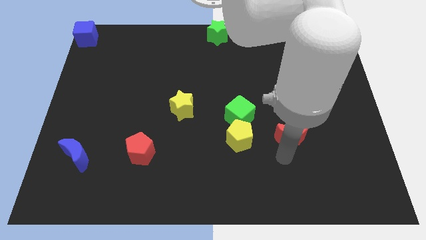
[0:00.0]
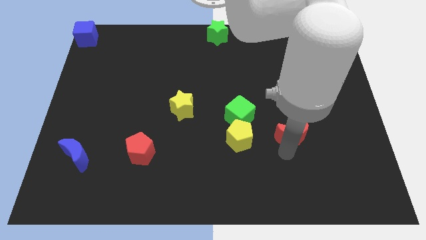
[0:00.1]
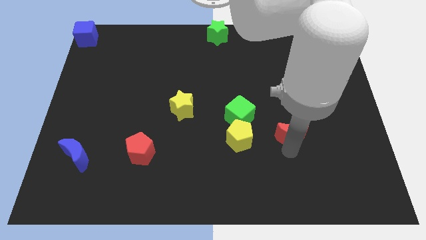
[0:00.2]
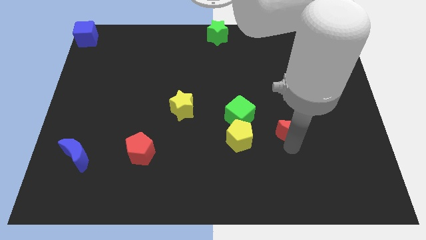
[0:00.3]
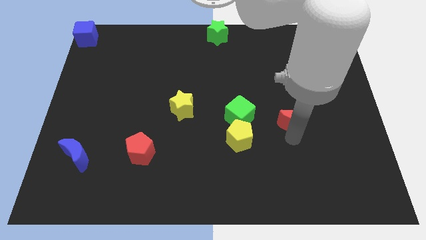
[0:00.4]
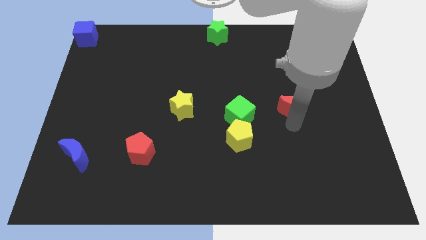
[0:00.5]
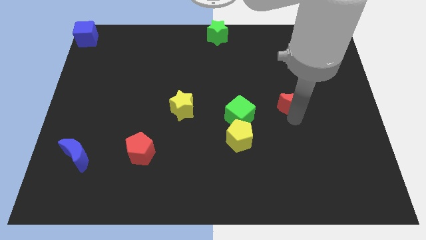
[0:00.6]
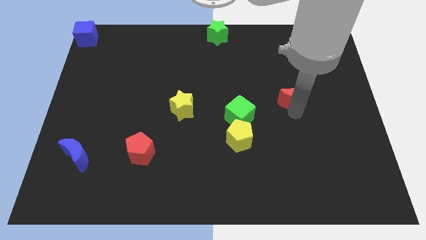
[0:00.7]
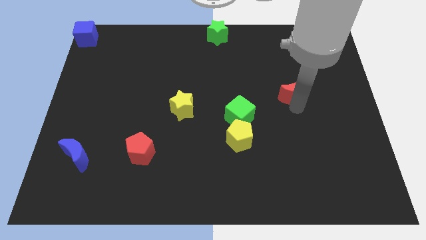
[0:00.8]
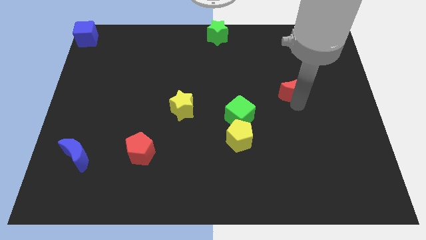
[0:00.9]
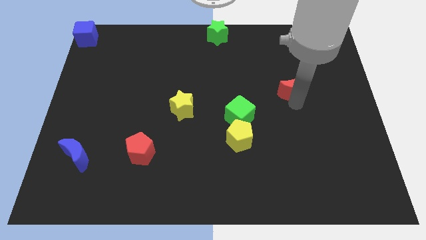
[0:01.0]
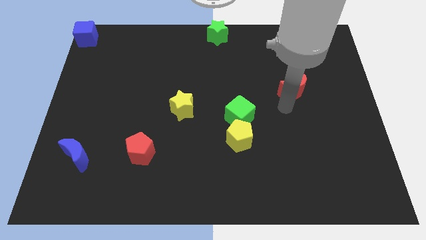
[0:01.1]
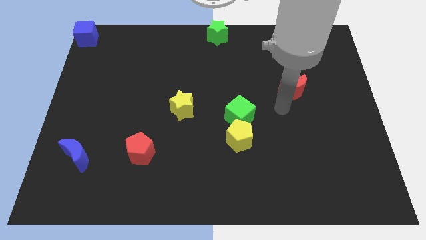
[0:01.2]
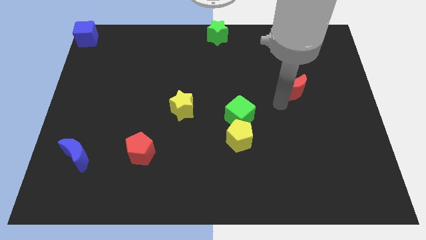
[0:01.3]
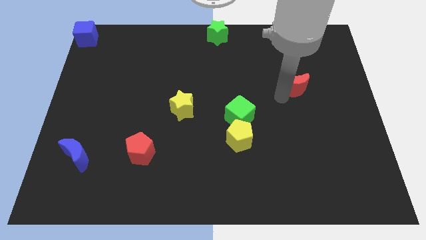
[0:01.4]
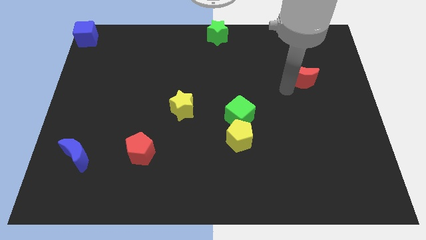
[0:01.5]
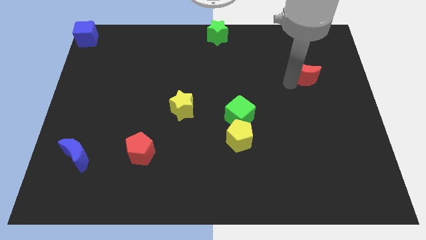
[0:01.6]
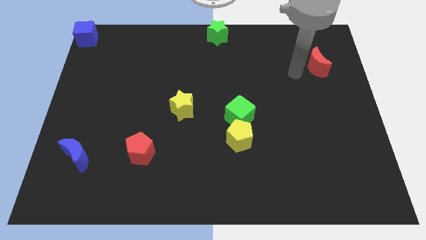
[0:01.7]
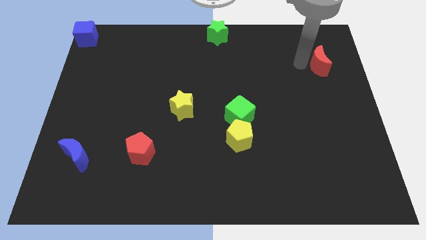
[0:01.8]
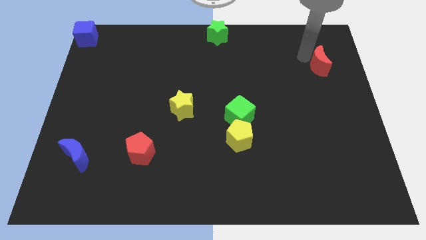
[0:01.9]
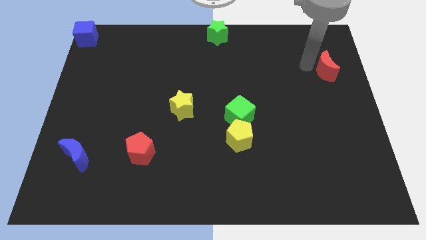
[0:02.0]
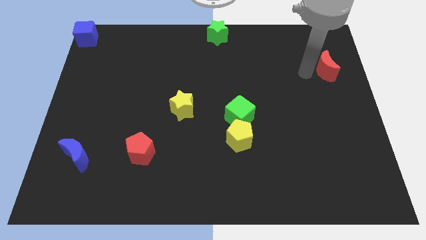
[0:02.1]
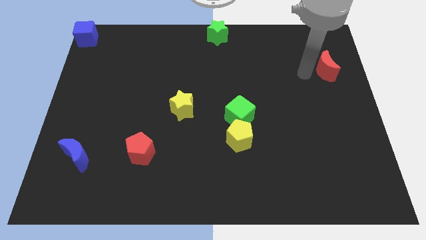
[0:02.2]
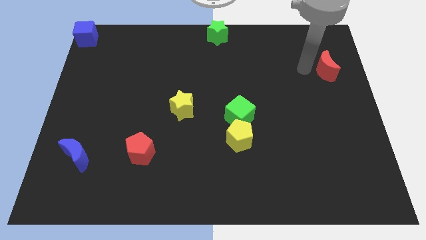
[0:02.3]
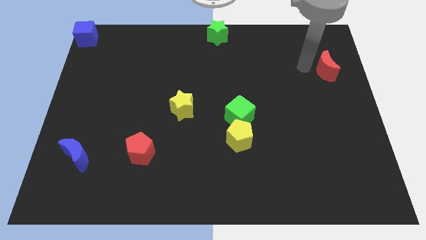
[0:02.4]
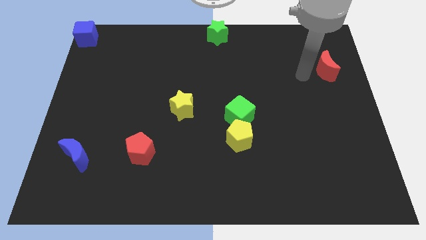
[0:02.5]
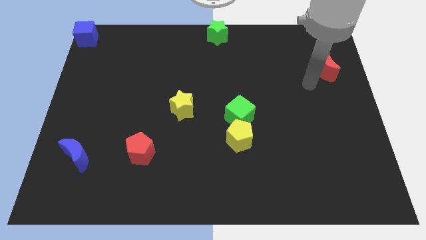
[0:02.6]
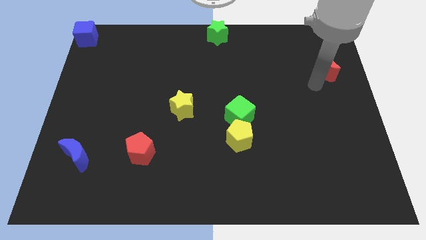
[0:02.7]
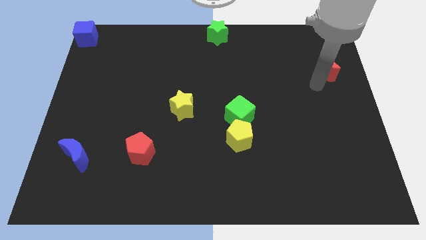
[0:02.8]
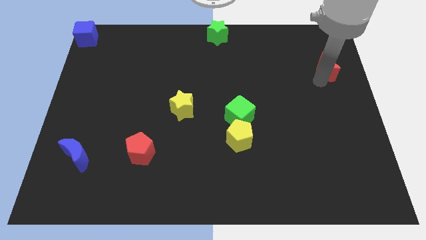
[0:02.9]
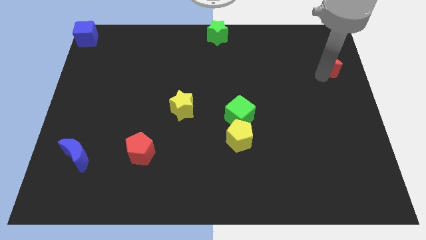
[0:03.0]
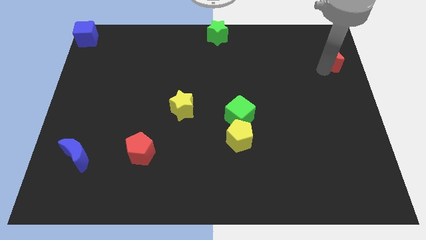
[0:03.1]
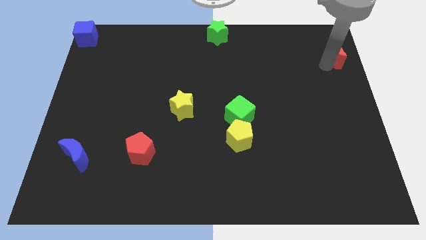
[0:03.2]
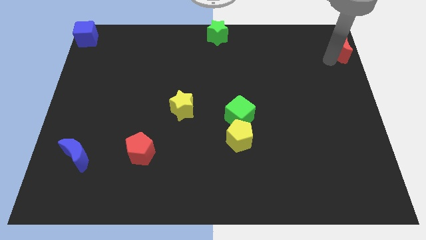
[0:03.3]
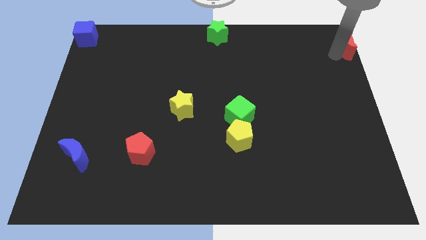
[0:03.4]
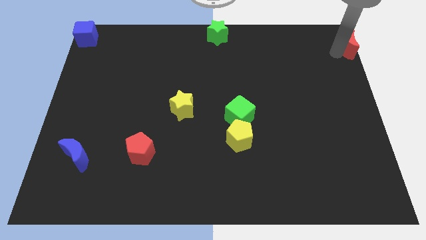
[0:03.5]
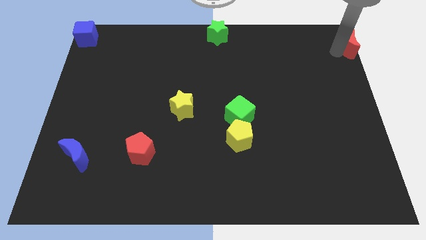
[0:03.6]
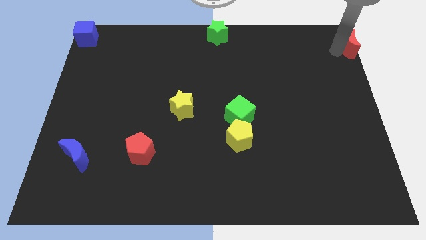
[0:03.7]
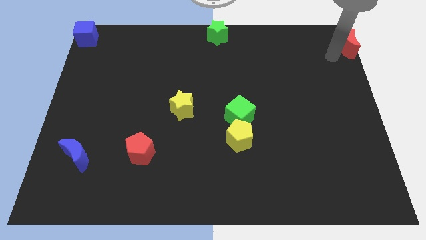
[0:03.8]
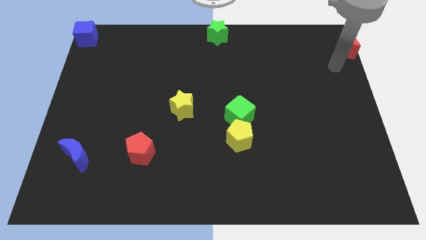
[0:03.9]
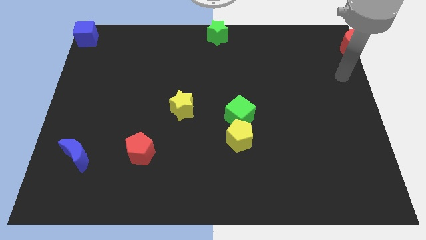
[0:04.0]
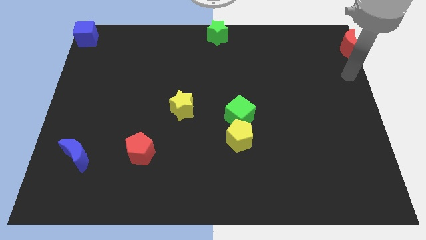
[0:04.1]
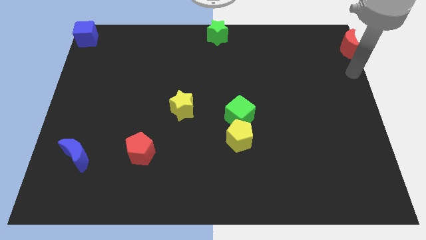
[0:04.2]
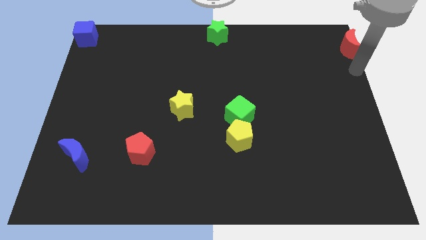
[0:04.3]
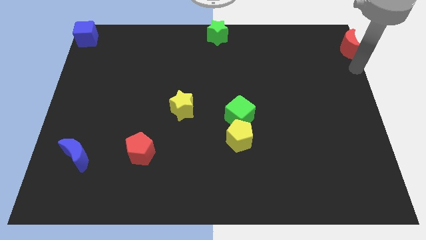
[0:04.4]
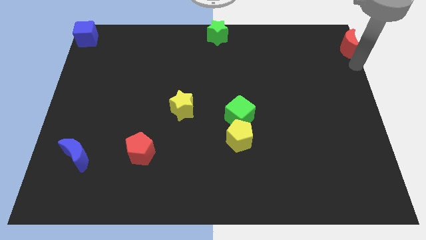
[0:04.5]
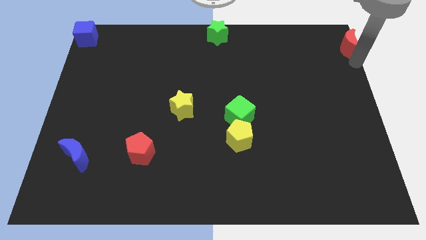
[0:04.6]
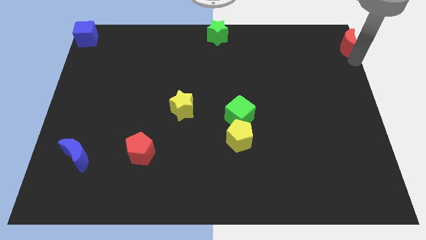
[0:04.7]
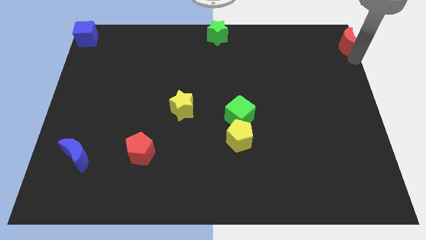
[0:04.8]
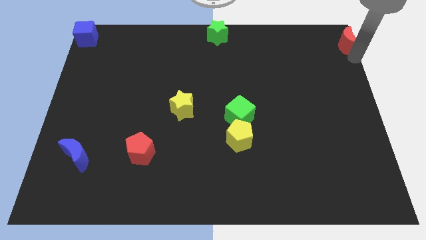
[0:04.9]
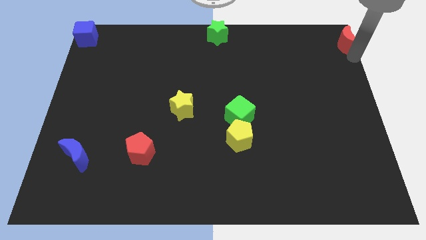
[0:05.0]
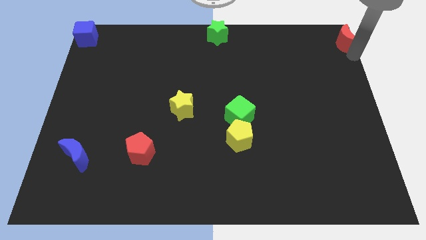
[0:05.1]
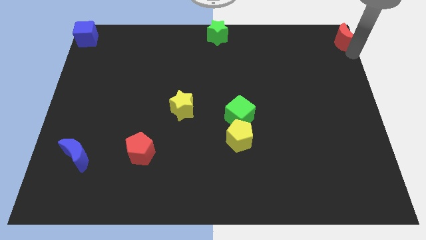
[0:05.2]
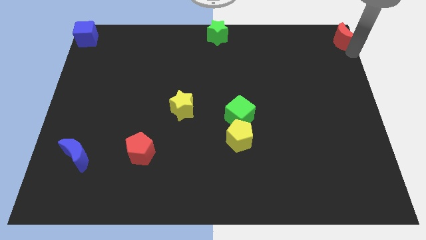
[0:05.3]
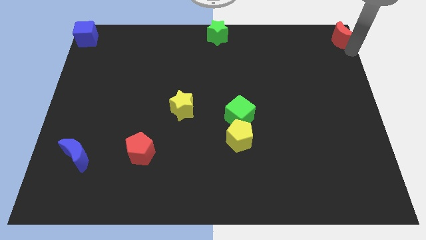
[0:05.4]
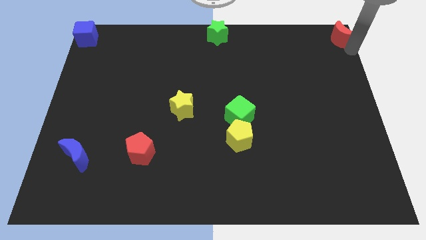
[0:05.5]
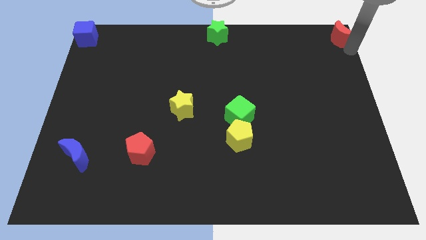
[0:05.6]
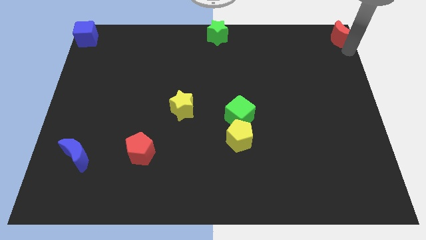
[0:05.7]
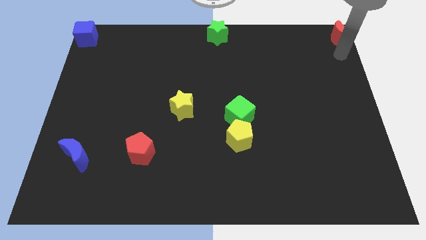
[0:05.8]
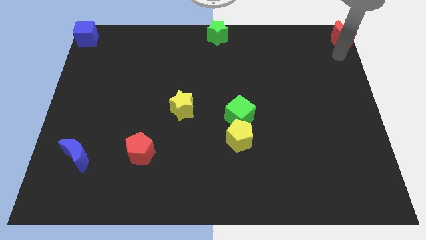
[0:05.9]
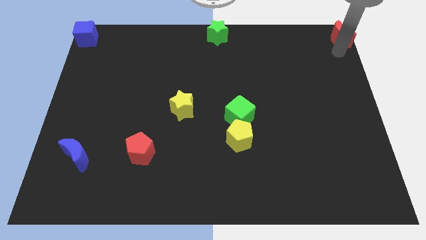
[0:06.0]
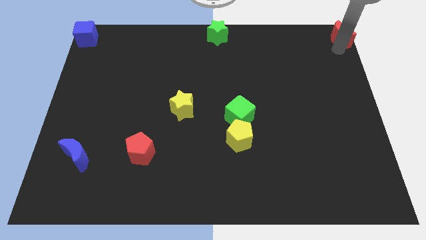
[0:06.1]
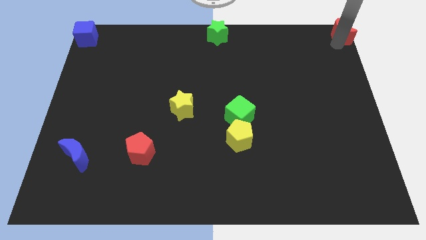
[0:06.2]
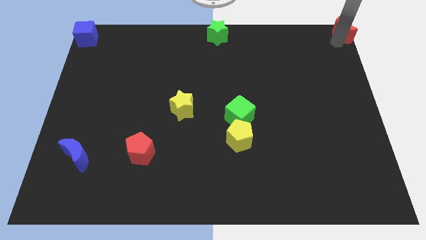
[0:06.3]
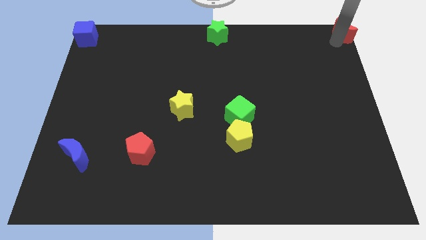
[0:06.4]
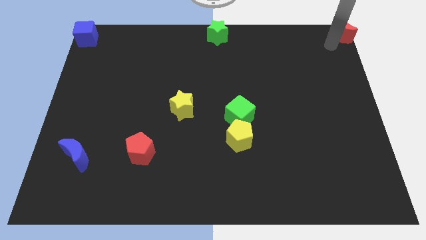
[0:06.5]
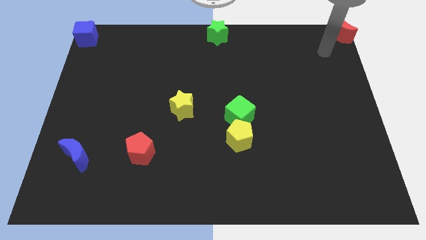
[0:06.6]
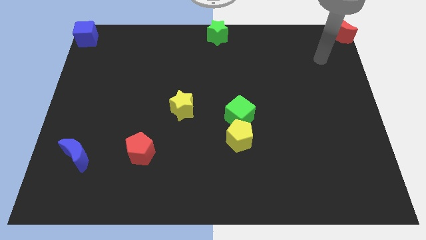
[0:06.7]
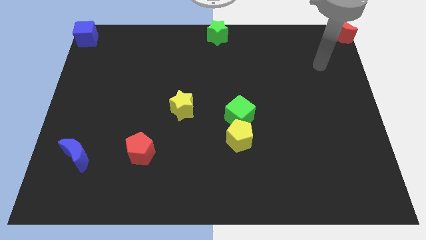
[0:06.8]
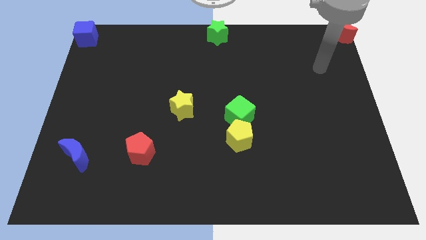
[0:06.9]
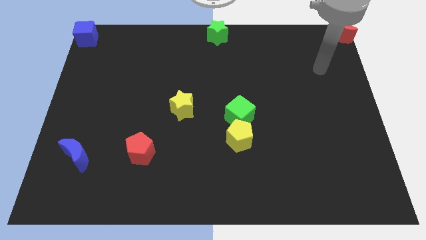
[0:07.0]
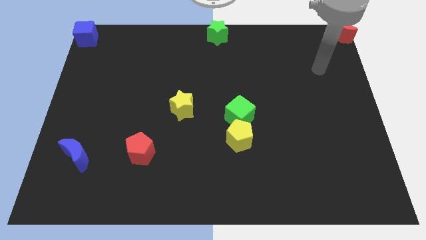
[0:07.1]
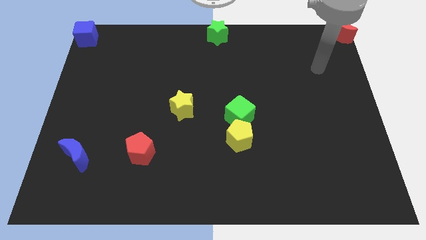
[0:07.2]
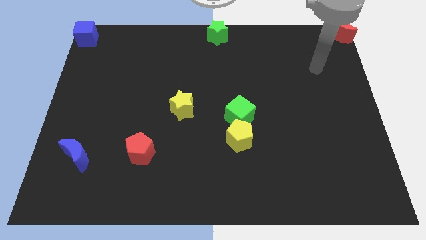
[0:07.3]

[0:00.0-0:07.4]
move red moon to the top right corner of the board

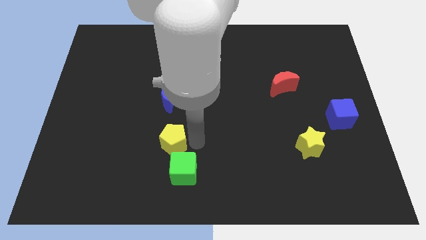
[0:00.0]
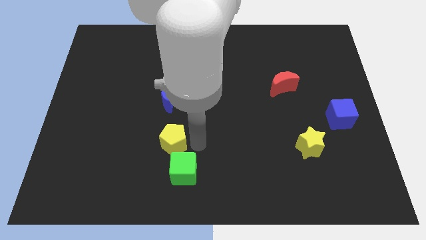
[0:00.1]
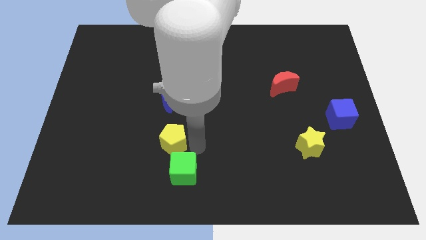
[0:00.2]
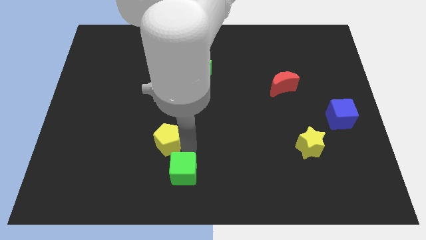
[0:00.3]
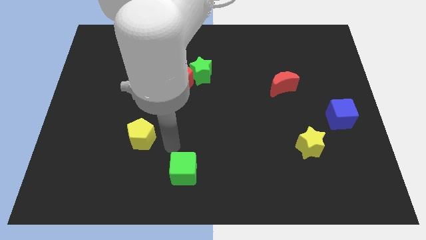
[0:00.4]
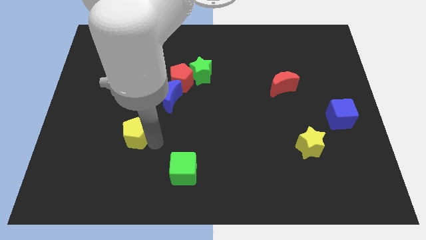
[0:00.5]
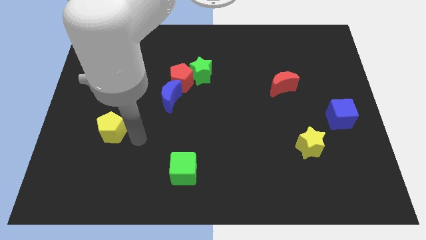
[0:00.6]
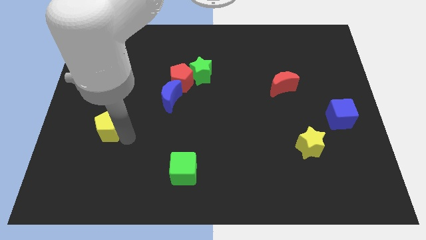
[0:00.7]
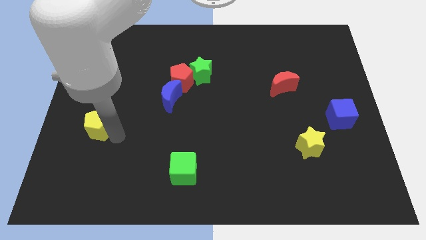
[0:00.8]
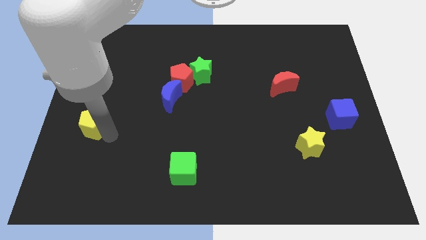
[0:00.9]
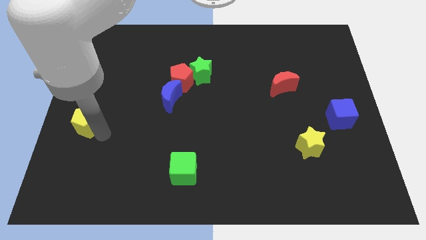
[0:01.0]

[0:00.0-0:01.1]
move the yellow pentagon towards left

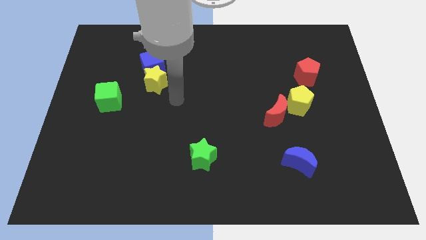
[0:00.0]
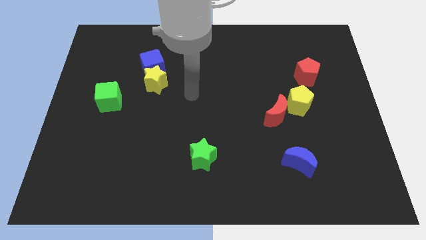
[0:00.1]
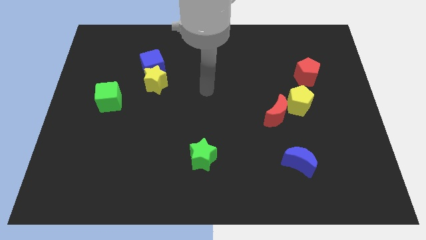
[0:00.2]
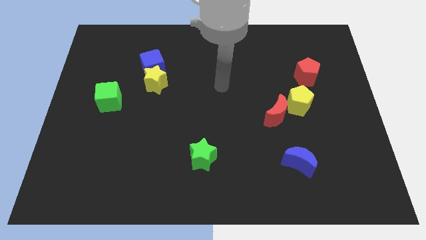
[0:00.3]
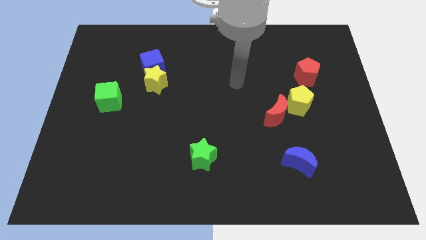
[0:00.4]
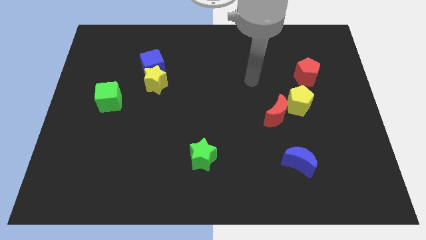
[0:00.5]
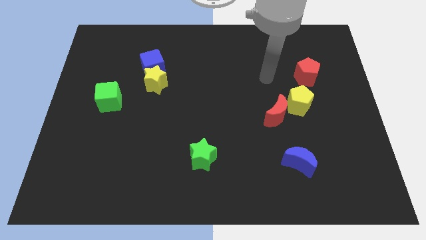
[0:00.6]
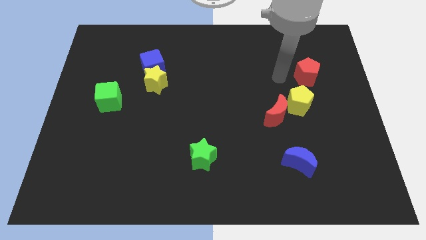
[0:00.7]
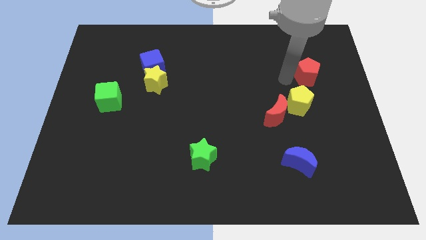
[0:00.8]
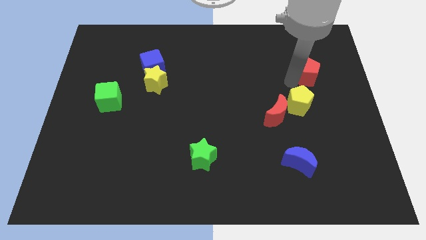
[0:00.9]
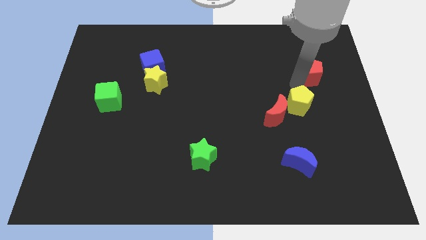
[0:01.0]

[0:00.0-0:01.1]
move the arm into the red pentagon
